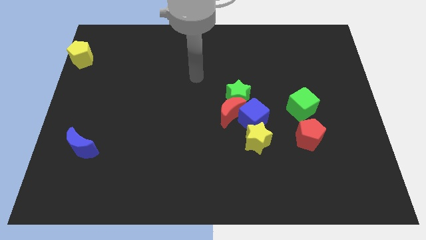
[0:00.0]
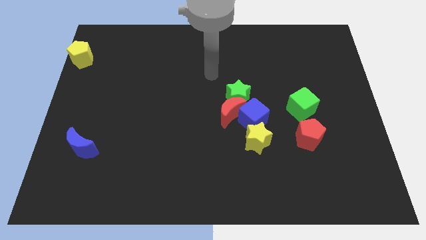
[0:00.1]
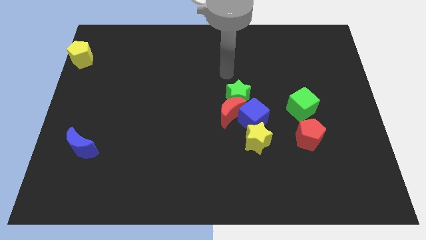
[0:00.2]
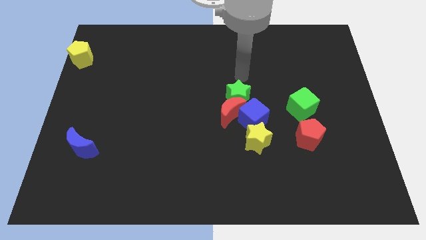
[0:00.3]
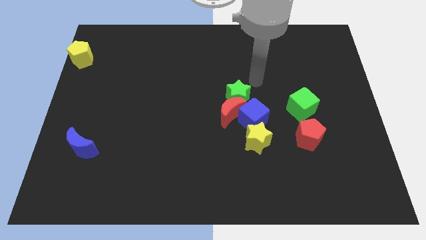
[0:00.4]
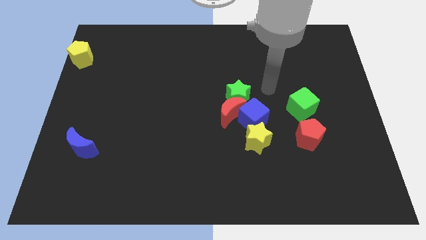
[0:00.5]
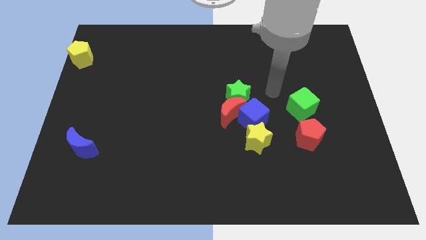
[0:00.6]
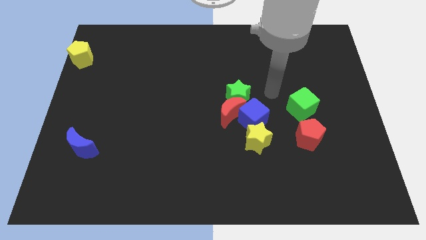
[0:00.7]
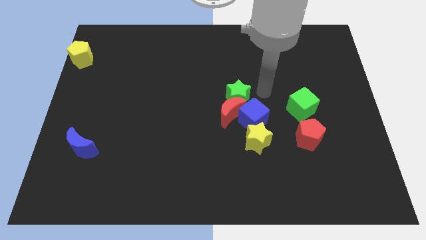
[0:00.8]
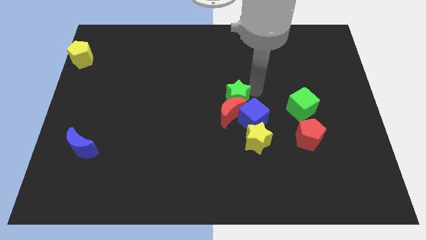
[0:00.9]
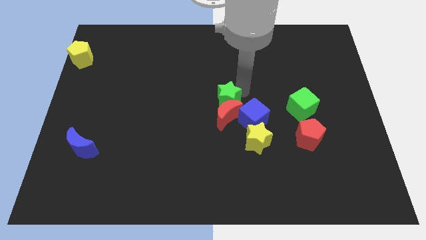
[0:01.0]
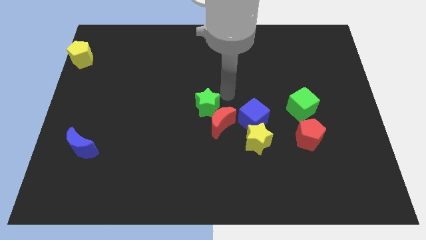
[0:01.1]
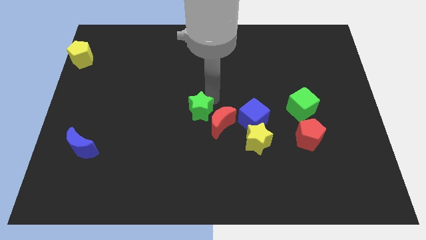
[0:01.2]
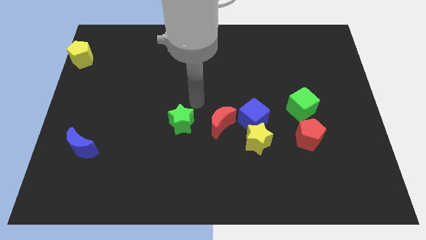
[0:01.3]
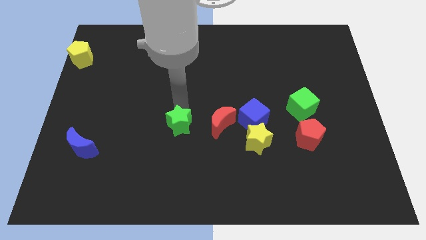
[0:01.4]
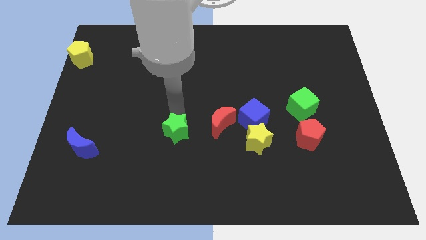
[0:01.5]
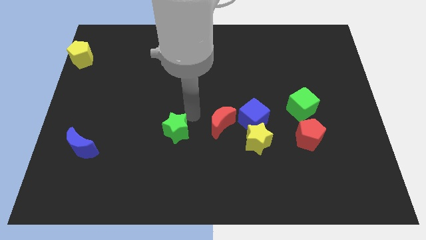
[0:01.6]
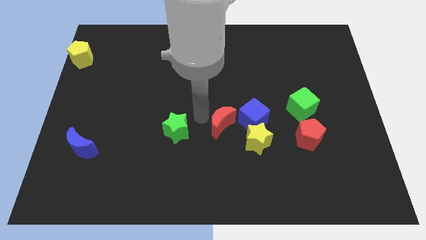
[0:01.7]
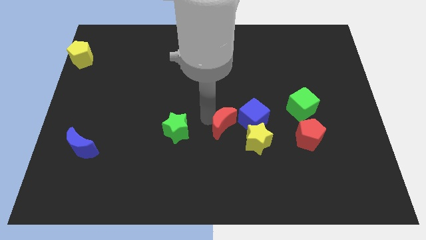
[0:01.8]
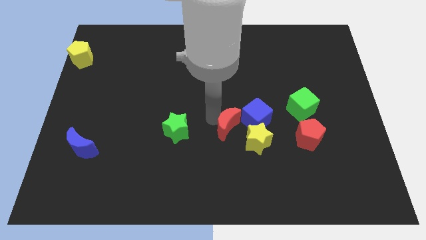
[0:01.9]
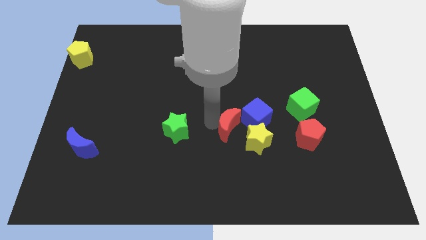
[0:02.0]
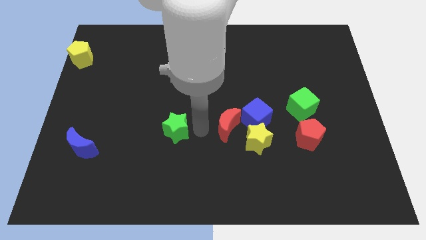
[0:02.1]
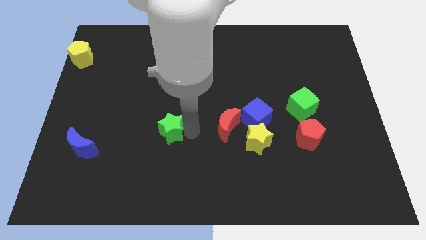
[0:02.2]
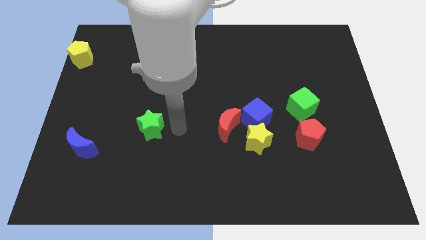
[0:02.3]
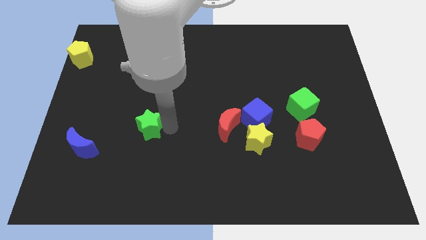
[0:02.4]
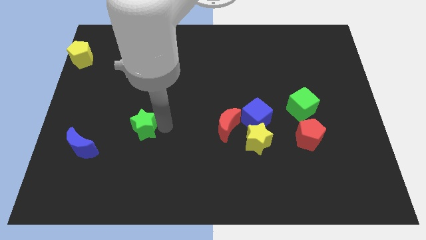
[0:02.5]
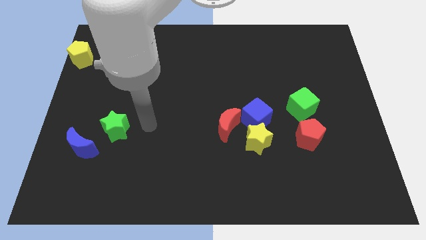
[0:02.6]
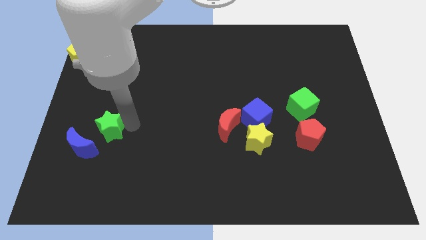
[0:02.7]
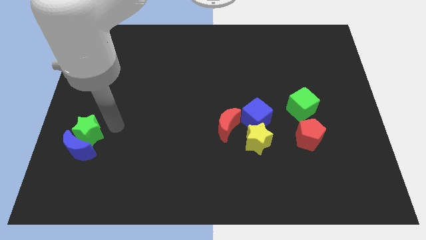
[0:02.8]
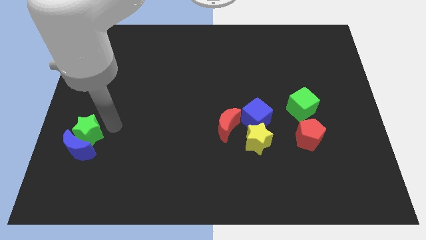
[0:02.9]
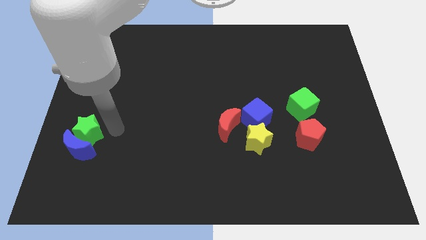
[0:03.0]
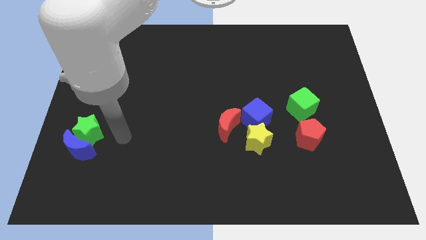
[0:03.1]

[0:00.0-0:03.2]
push the green star into blue crescent

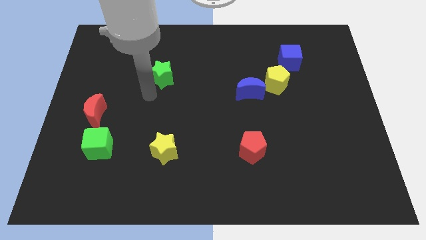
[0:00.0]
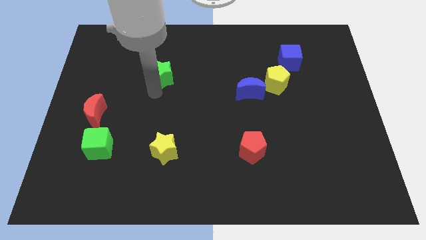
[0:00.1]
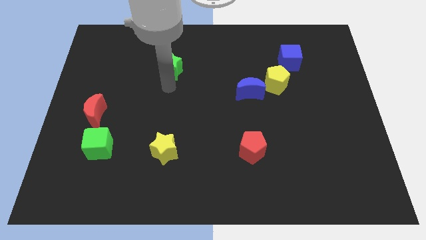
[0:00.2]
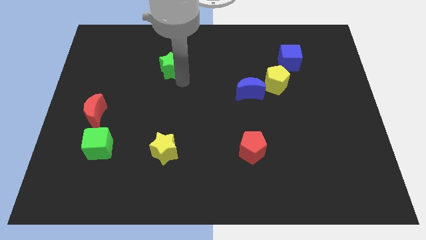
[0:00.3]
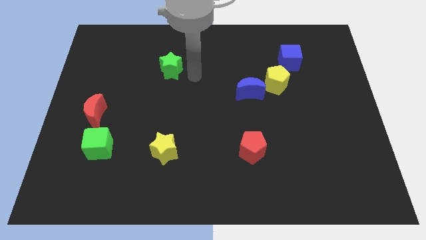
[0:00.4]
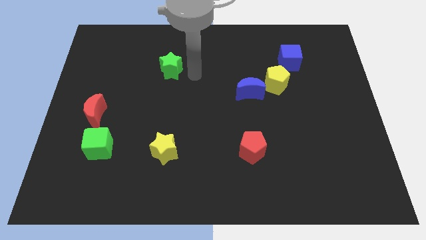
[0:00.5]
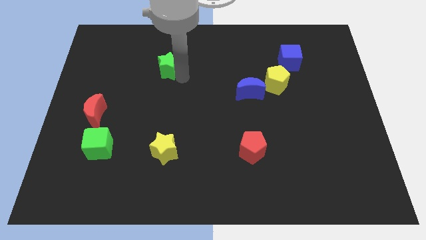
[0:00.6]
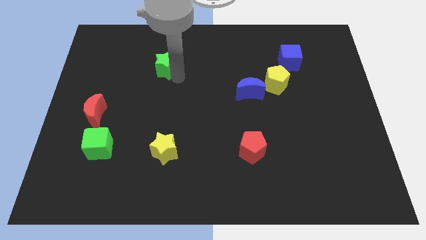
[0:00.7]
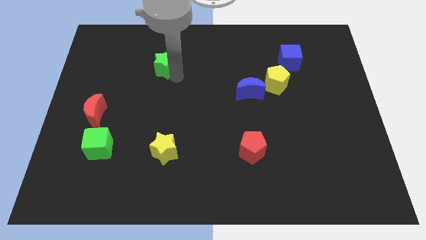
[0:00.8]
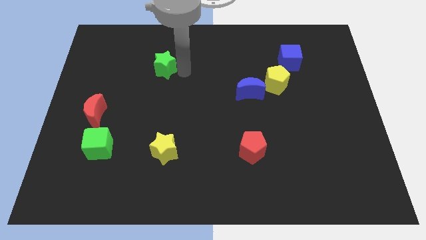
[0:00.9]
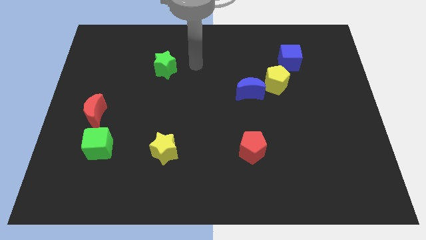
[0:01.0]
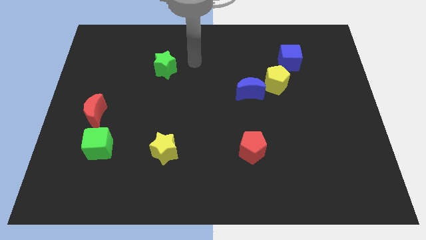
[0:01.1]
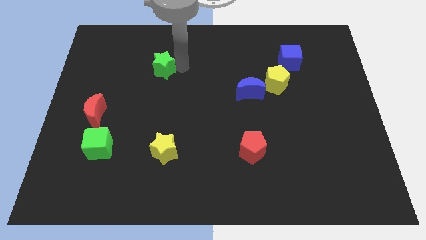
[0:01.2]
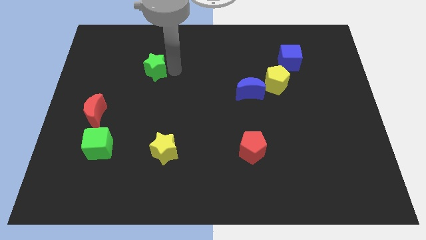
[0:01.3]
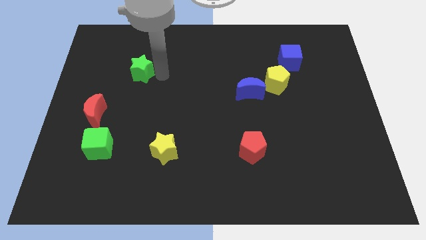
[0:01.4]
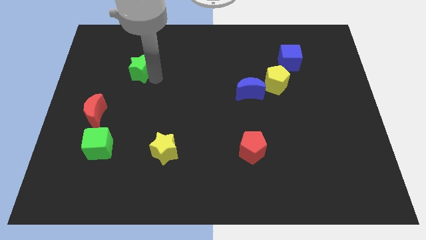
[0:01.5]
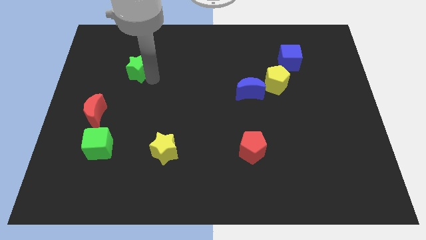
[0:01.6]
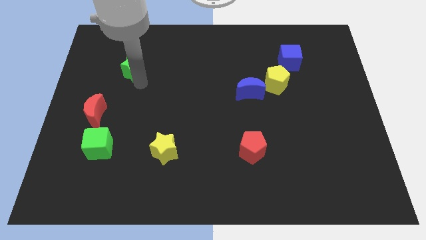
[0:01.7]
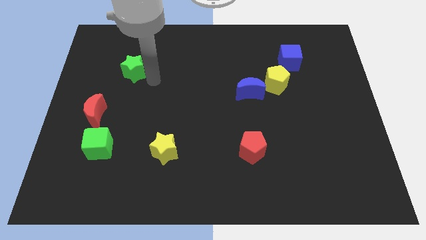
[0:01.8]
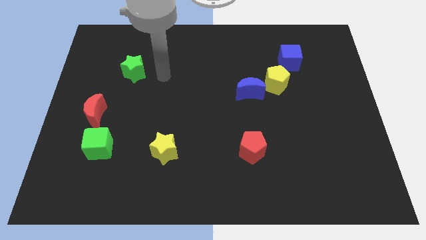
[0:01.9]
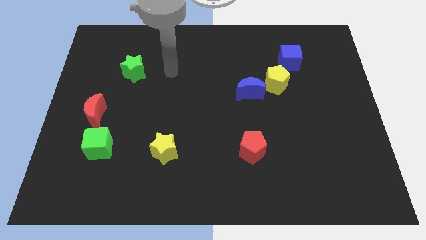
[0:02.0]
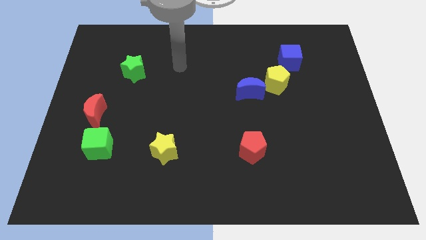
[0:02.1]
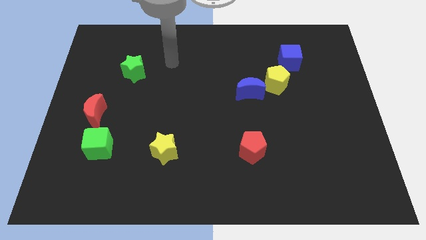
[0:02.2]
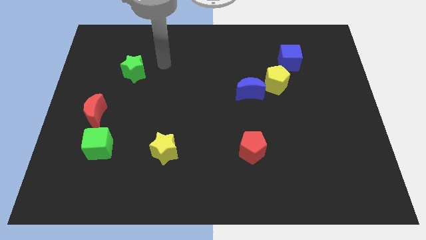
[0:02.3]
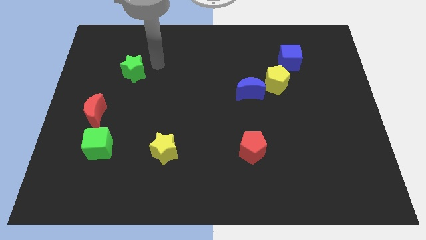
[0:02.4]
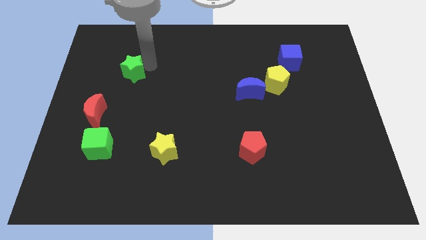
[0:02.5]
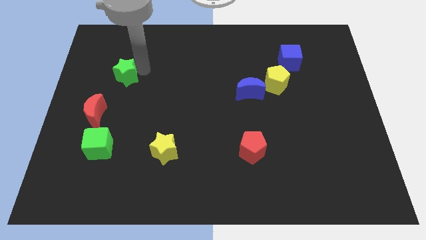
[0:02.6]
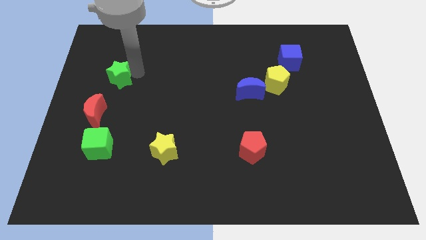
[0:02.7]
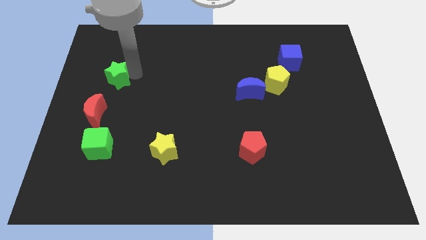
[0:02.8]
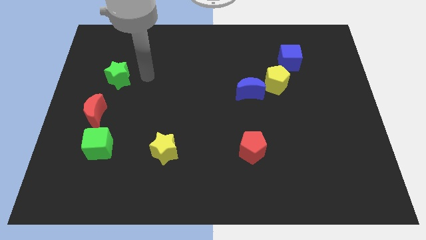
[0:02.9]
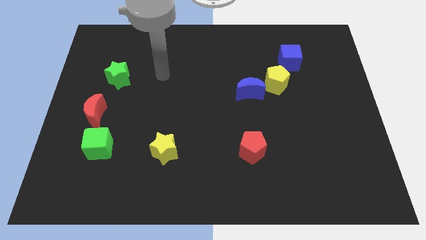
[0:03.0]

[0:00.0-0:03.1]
push the green star towards the red moon

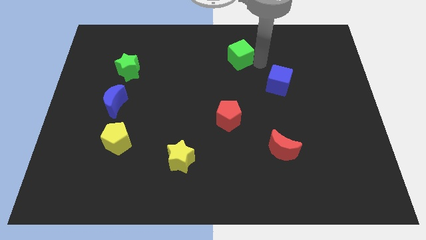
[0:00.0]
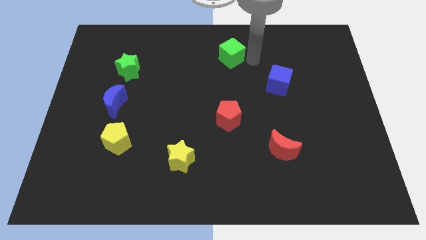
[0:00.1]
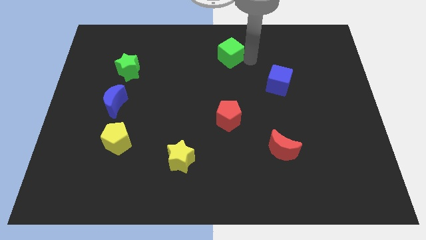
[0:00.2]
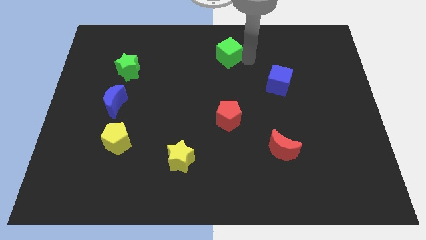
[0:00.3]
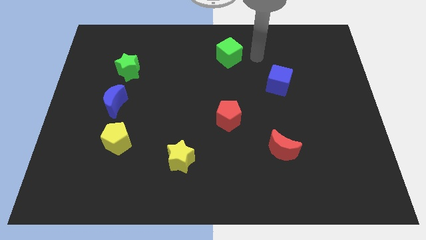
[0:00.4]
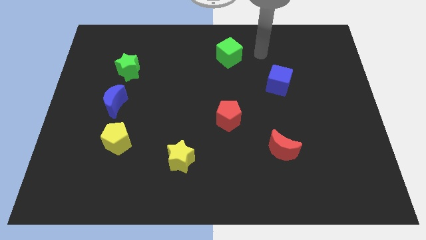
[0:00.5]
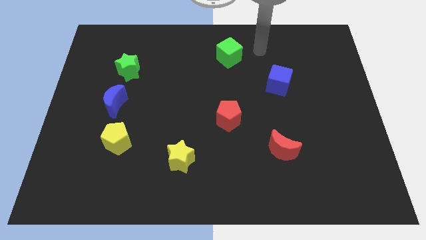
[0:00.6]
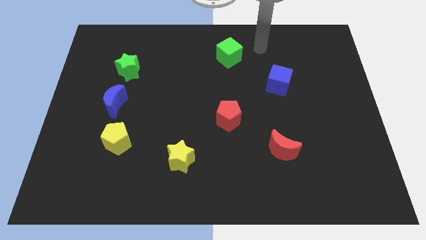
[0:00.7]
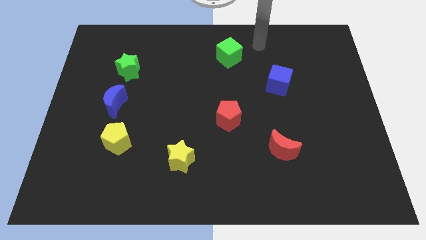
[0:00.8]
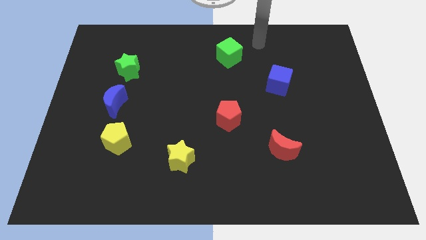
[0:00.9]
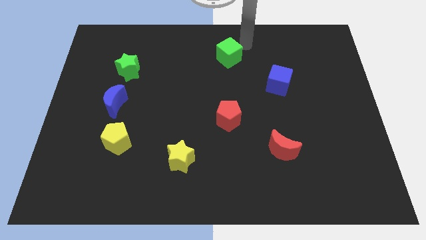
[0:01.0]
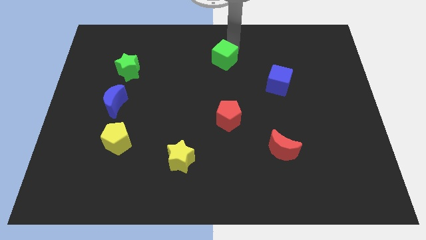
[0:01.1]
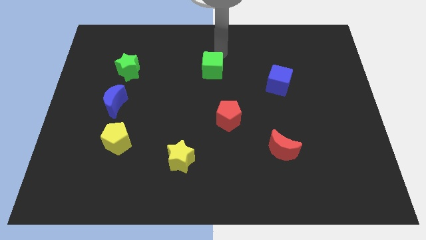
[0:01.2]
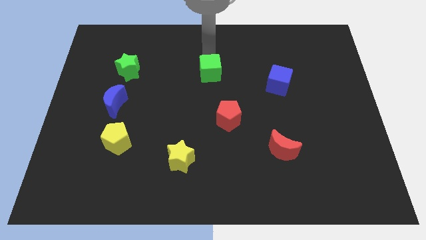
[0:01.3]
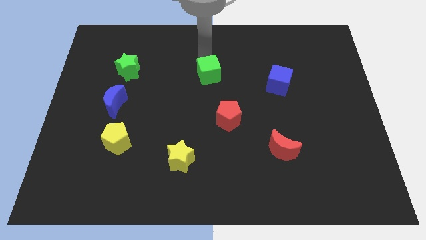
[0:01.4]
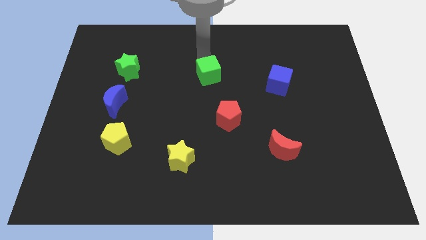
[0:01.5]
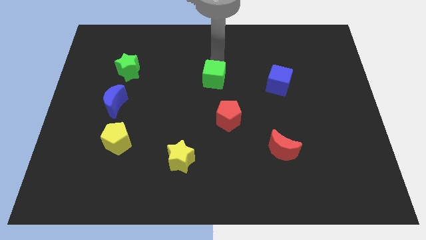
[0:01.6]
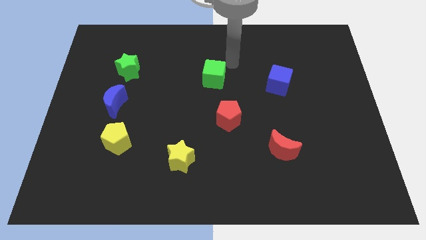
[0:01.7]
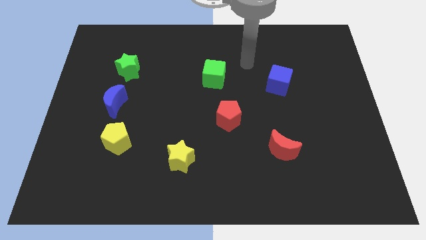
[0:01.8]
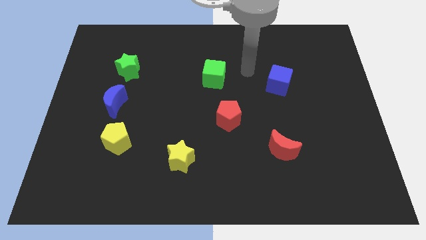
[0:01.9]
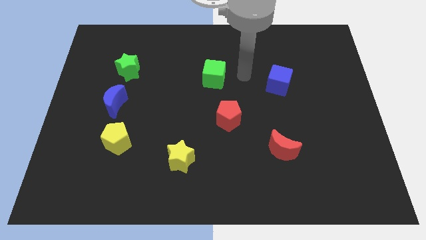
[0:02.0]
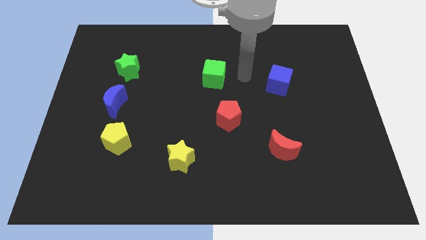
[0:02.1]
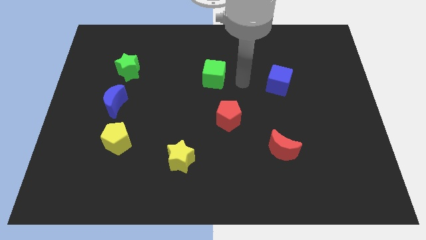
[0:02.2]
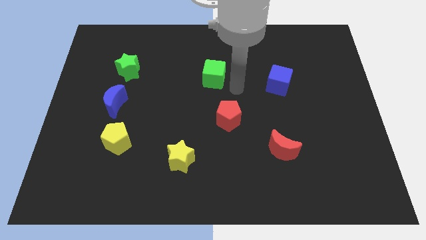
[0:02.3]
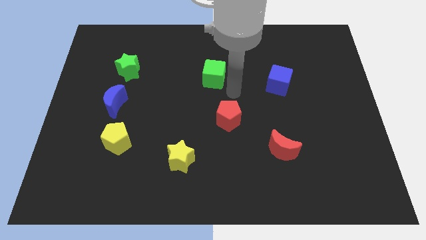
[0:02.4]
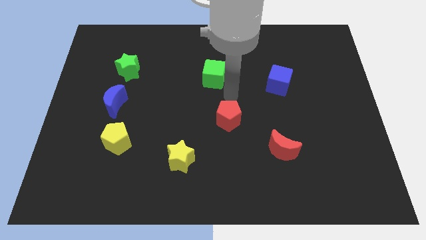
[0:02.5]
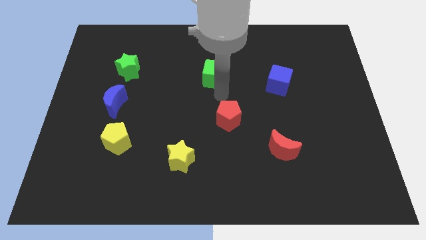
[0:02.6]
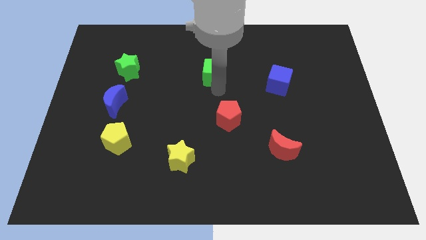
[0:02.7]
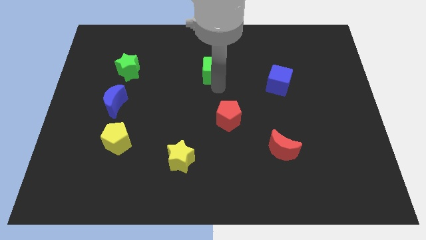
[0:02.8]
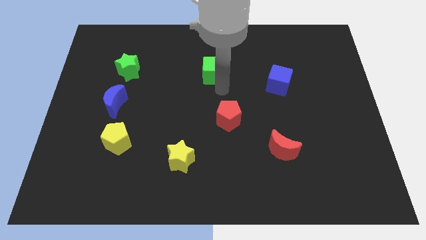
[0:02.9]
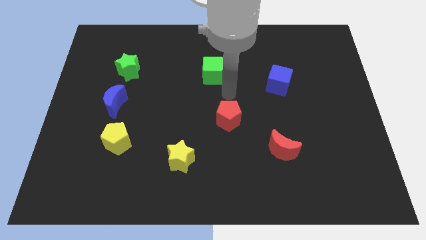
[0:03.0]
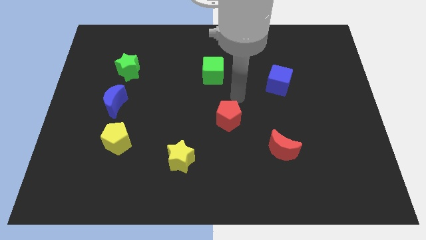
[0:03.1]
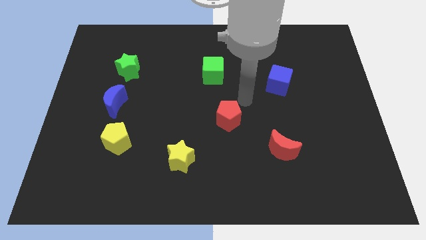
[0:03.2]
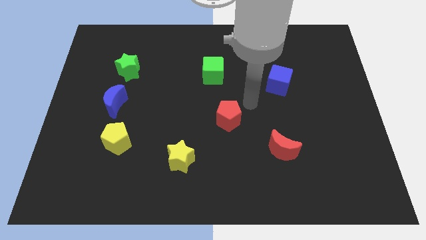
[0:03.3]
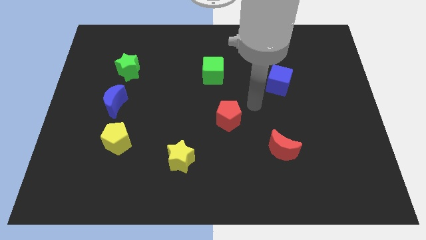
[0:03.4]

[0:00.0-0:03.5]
move the green cube to the center
